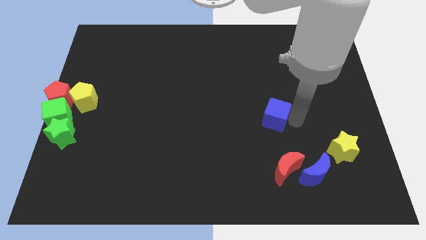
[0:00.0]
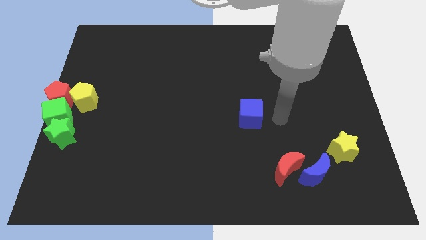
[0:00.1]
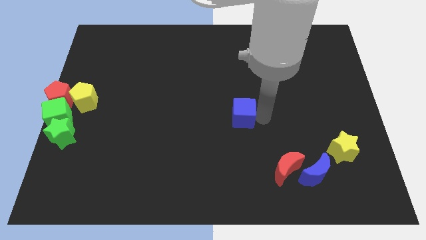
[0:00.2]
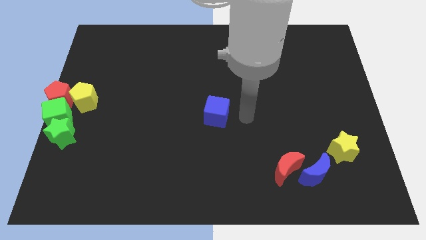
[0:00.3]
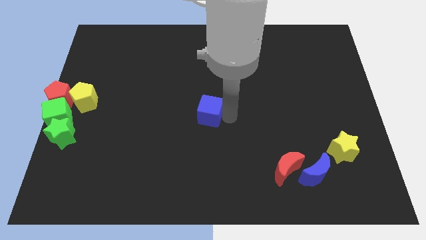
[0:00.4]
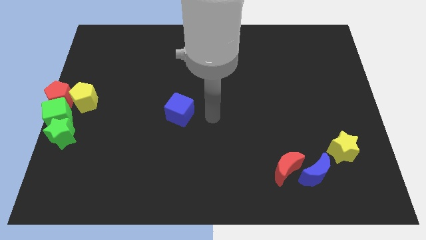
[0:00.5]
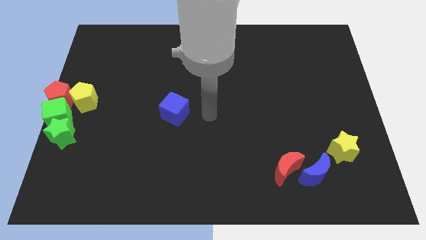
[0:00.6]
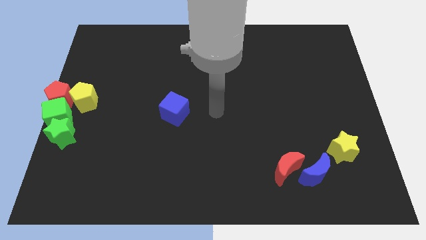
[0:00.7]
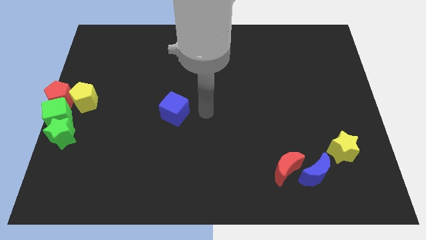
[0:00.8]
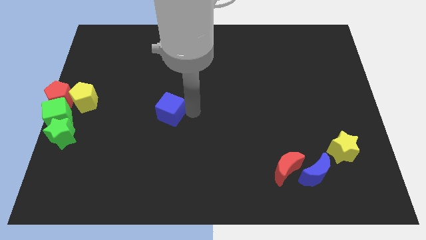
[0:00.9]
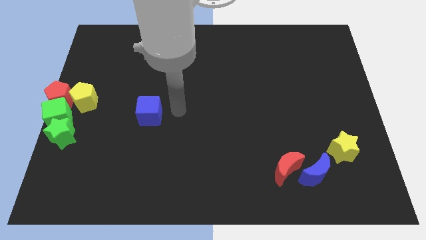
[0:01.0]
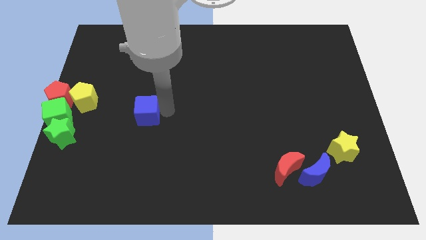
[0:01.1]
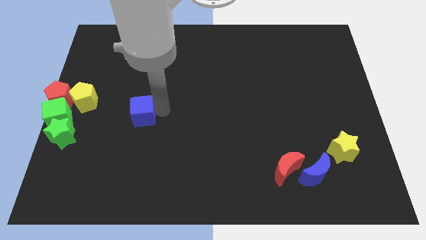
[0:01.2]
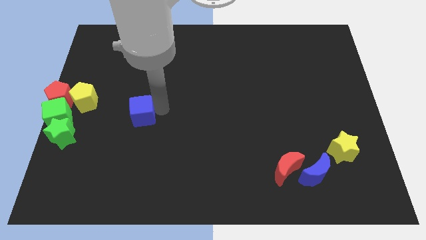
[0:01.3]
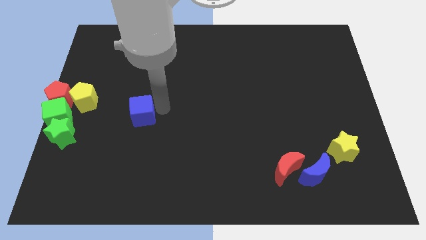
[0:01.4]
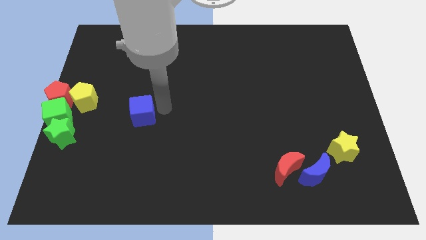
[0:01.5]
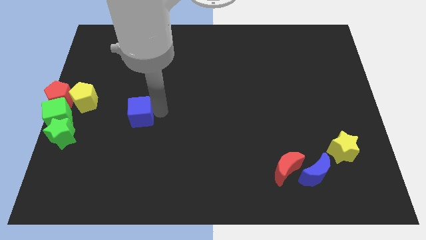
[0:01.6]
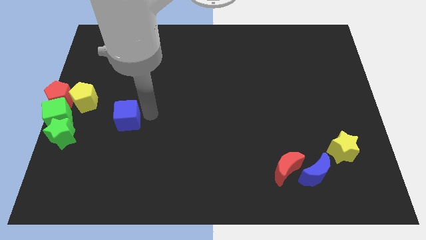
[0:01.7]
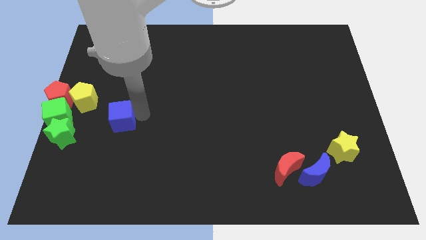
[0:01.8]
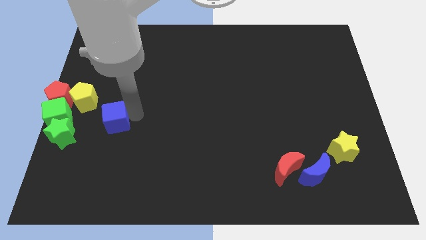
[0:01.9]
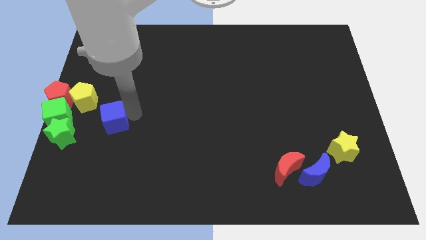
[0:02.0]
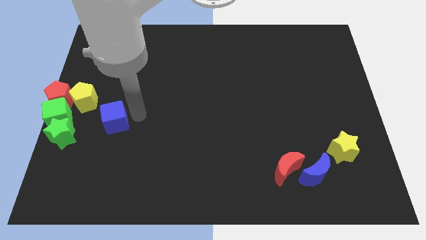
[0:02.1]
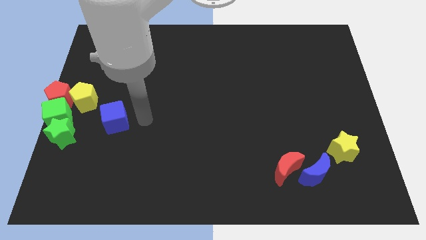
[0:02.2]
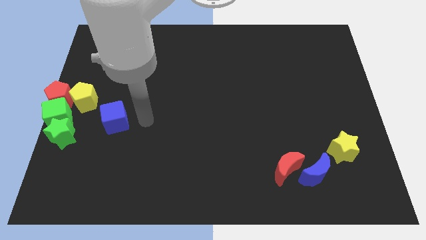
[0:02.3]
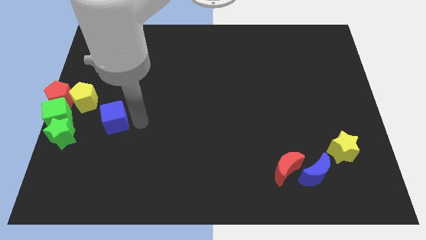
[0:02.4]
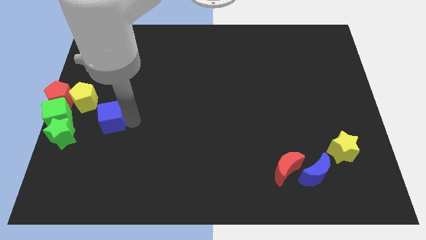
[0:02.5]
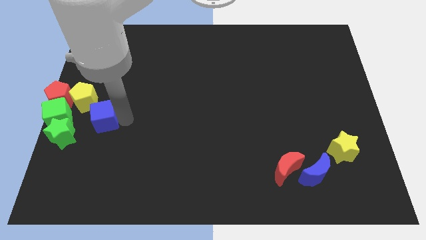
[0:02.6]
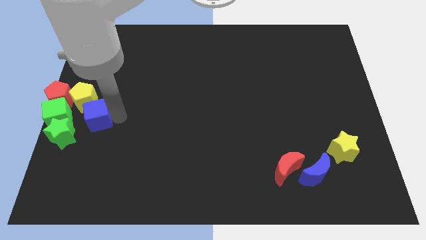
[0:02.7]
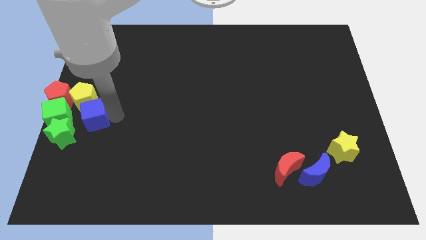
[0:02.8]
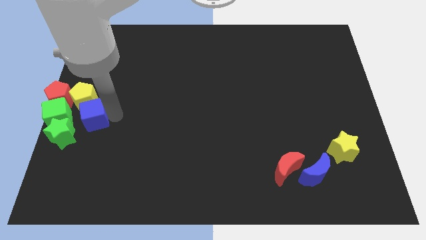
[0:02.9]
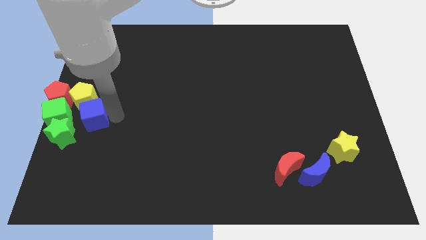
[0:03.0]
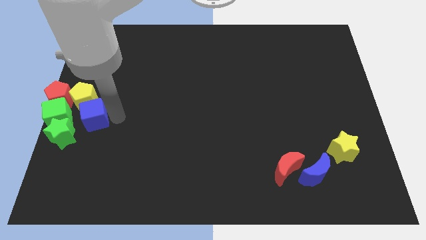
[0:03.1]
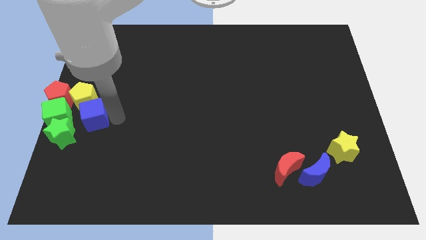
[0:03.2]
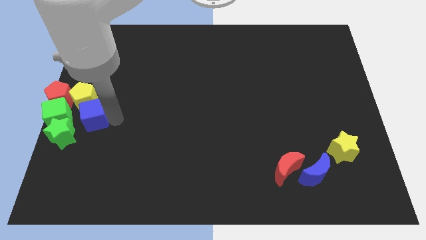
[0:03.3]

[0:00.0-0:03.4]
place blue cube to the bottom of yellow pentagon

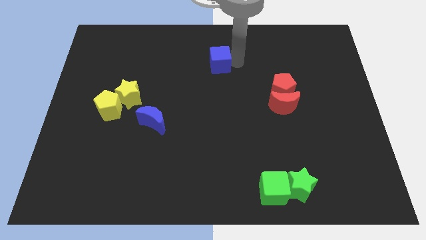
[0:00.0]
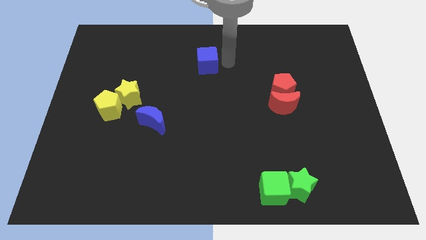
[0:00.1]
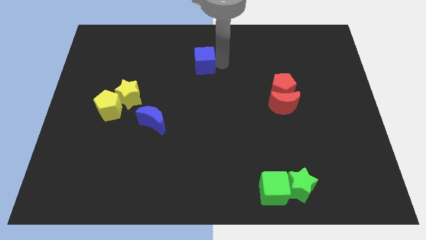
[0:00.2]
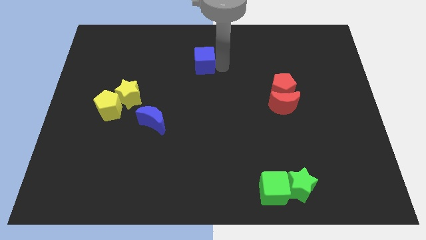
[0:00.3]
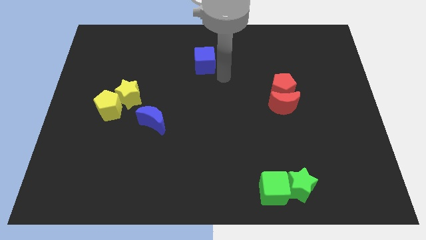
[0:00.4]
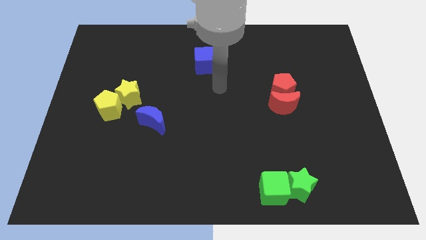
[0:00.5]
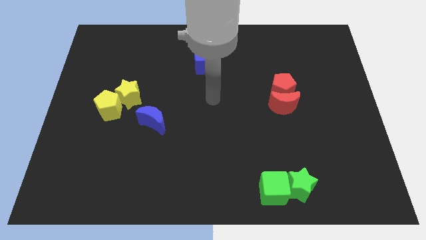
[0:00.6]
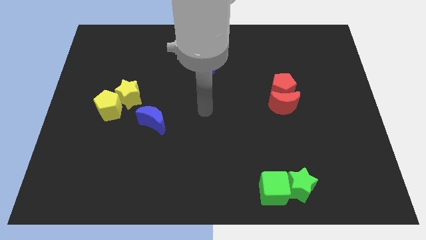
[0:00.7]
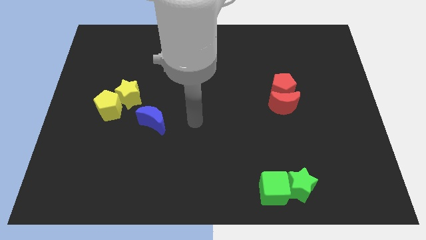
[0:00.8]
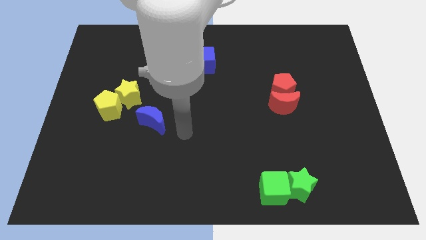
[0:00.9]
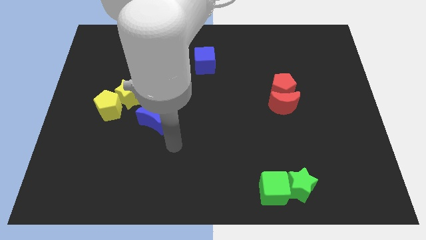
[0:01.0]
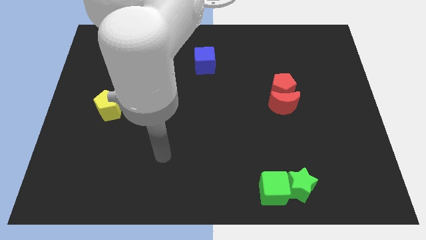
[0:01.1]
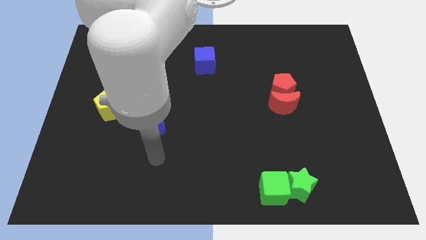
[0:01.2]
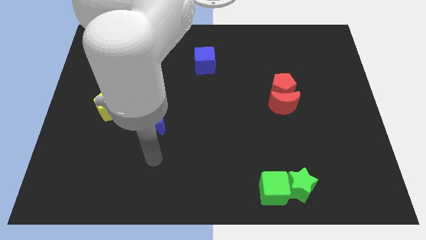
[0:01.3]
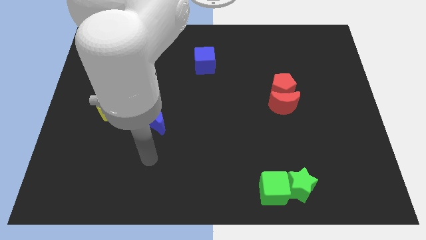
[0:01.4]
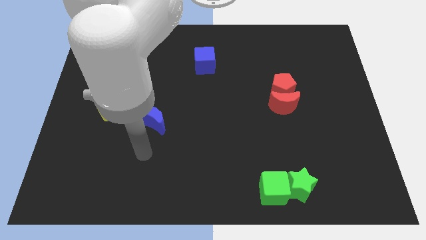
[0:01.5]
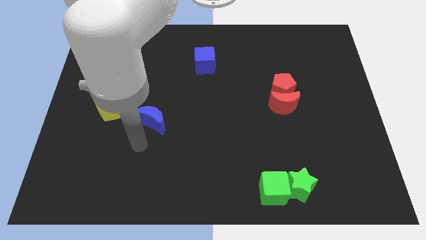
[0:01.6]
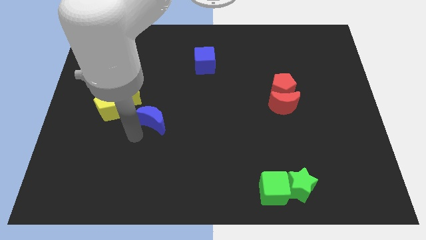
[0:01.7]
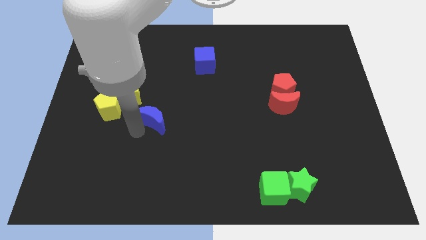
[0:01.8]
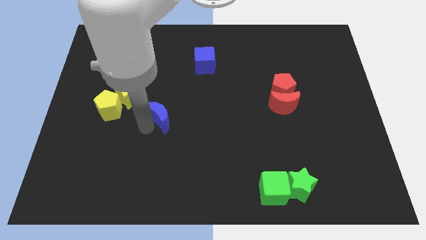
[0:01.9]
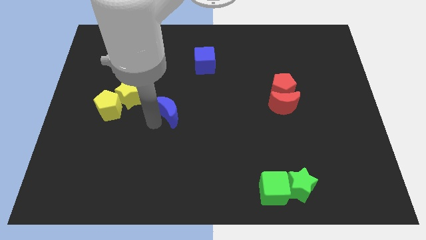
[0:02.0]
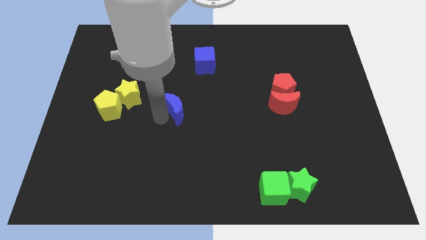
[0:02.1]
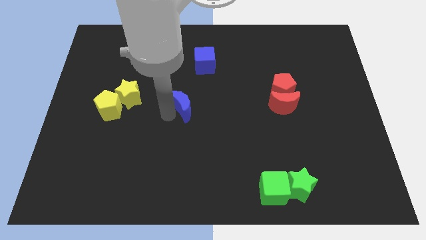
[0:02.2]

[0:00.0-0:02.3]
move your arm towards the blue moon

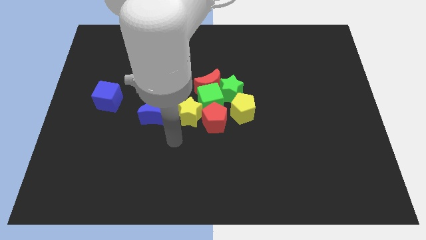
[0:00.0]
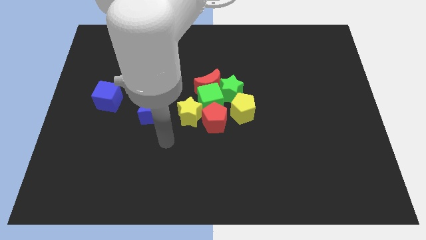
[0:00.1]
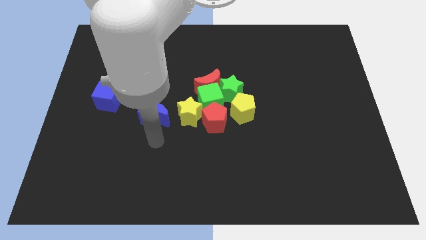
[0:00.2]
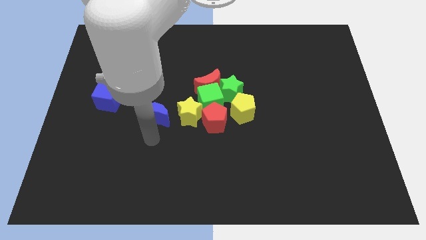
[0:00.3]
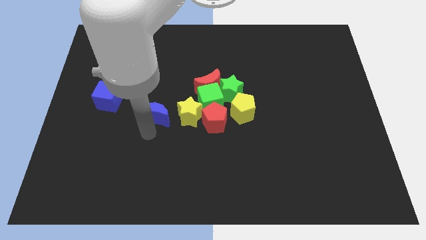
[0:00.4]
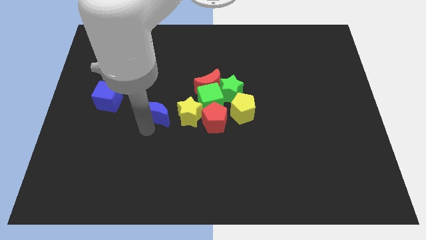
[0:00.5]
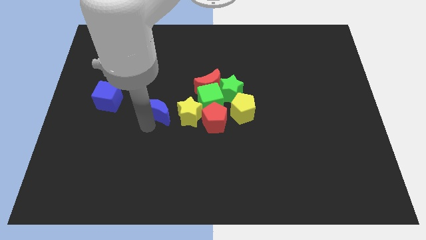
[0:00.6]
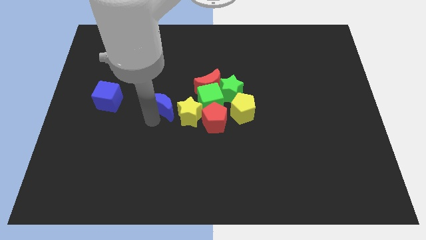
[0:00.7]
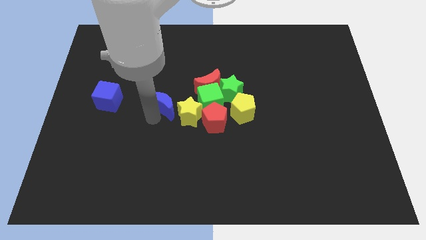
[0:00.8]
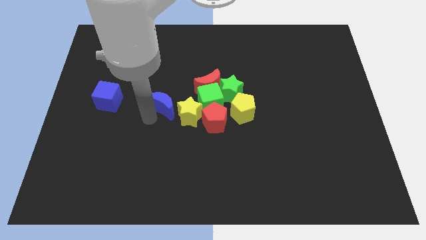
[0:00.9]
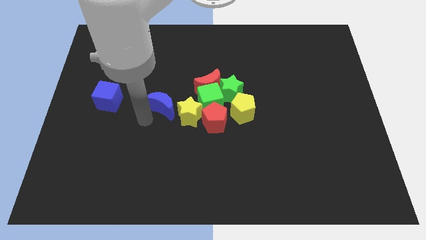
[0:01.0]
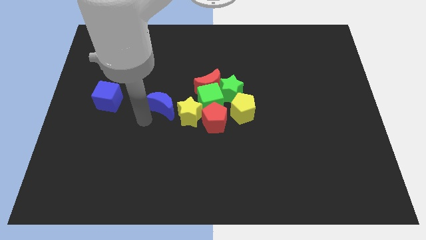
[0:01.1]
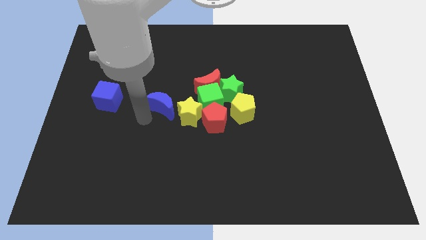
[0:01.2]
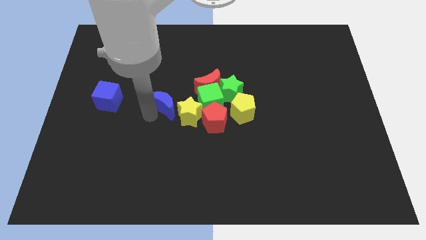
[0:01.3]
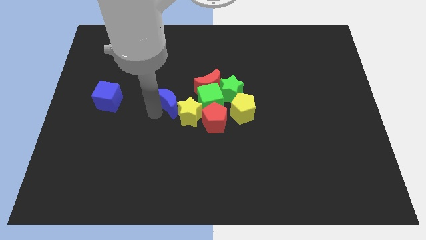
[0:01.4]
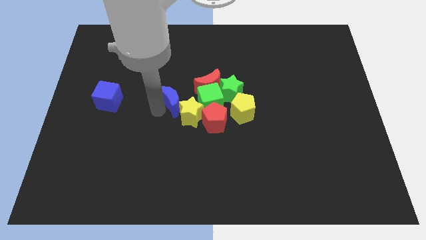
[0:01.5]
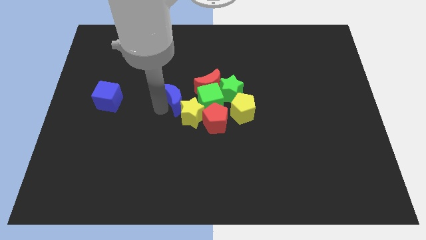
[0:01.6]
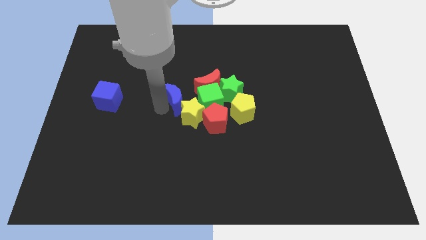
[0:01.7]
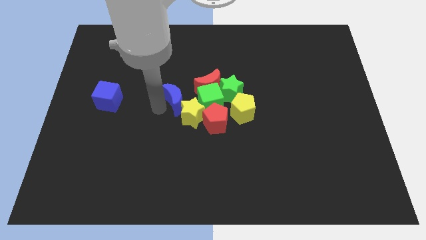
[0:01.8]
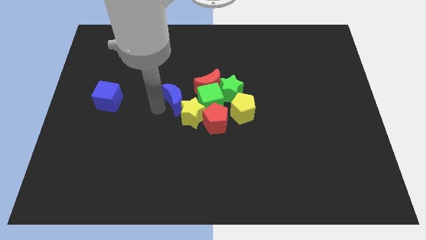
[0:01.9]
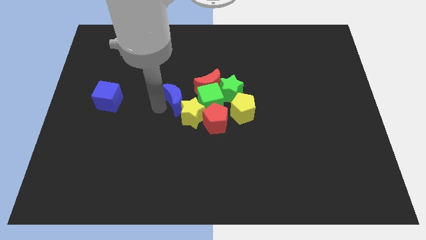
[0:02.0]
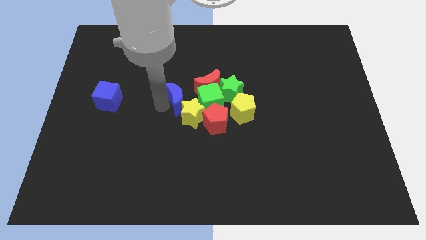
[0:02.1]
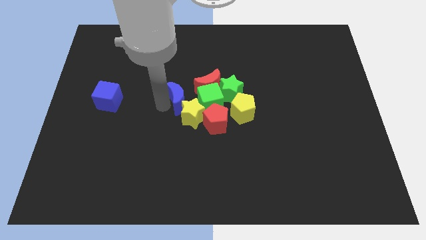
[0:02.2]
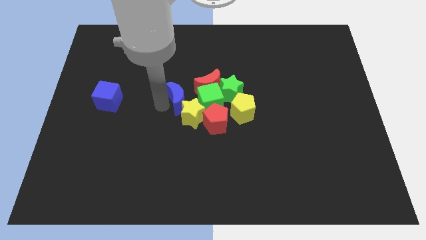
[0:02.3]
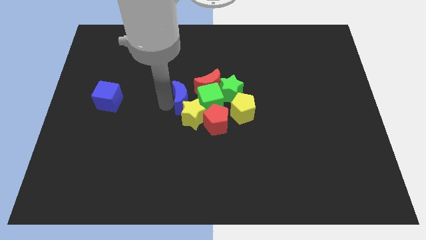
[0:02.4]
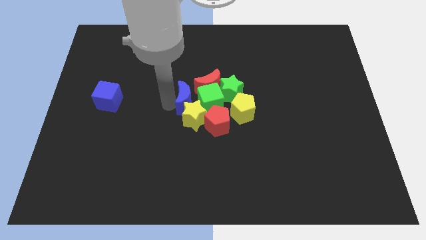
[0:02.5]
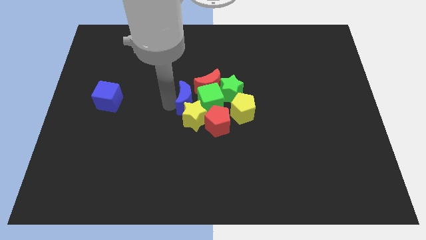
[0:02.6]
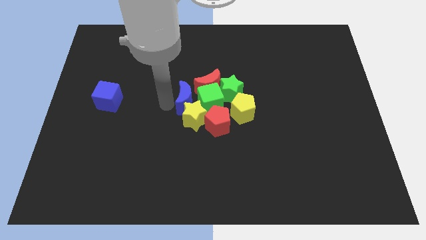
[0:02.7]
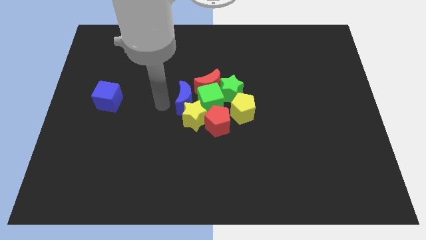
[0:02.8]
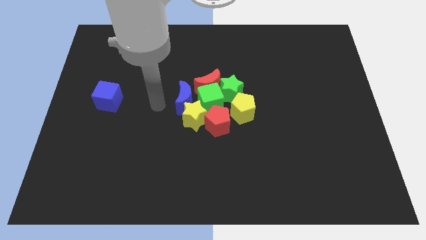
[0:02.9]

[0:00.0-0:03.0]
move blue moon on top of yellow star

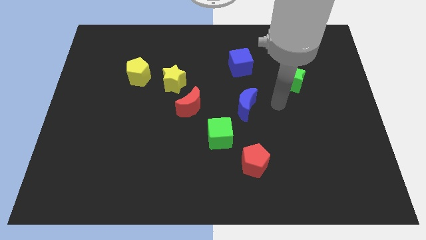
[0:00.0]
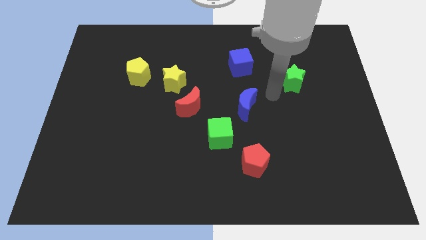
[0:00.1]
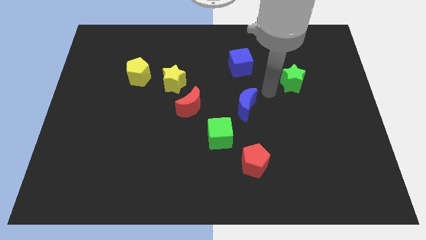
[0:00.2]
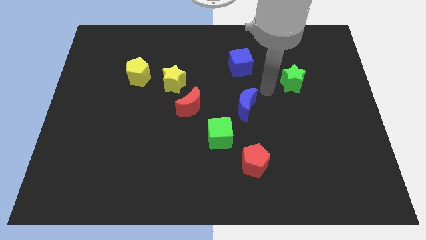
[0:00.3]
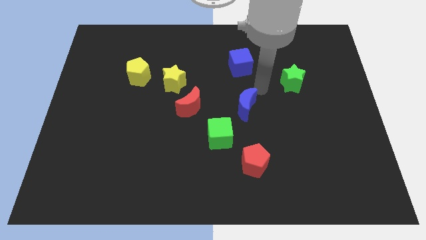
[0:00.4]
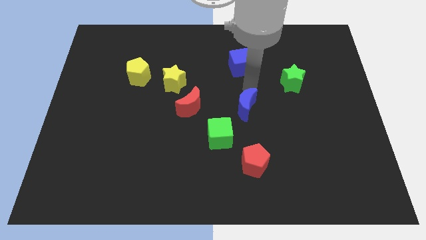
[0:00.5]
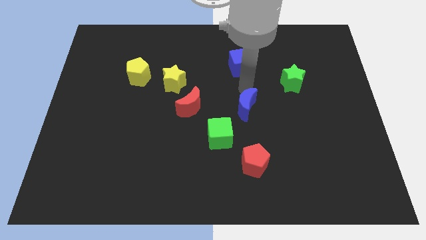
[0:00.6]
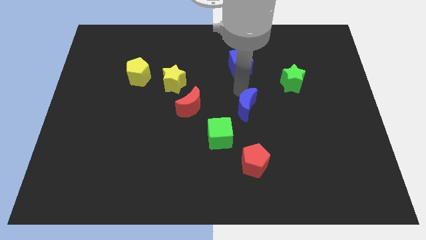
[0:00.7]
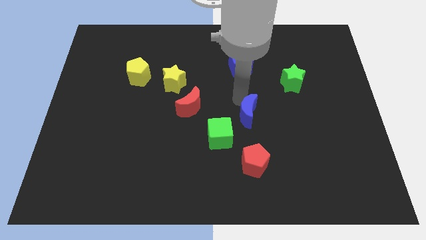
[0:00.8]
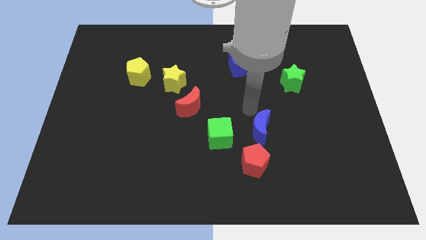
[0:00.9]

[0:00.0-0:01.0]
place blue moon on the top of red pentagon
